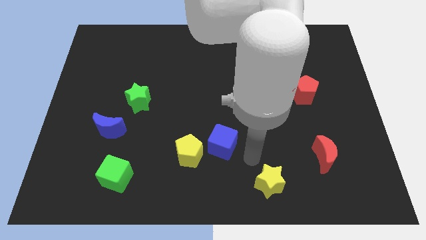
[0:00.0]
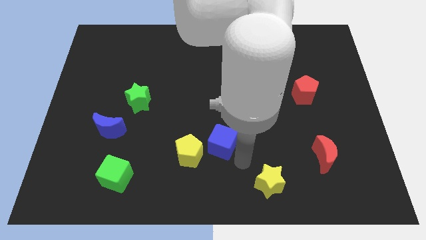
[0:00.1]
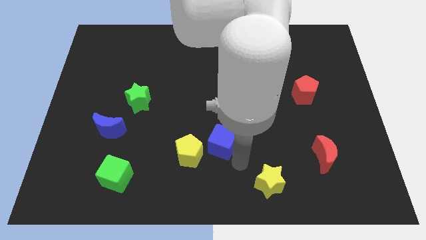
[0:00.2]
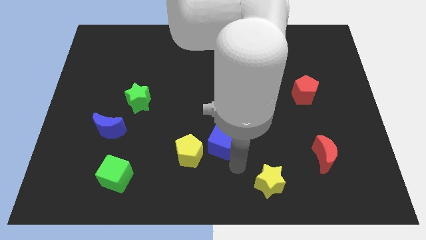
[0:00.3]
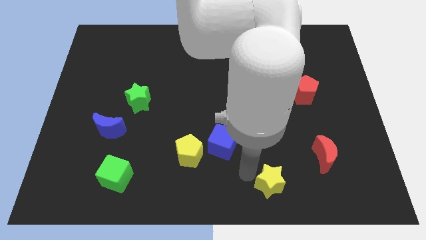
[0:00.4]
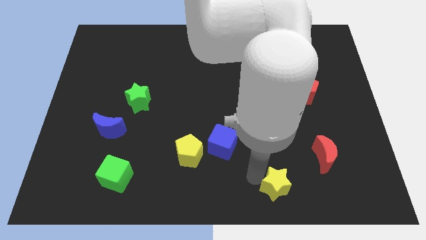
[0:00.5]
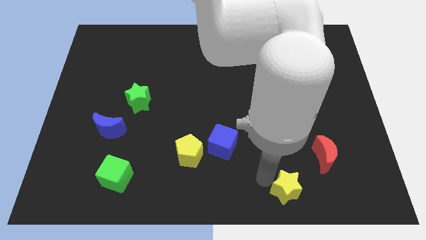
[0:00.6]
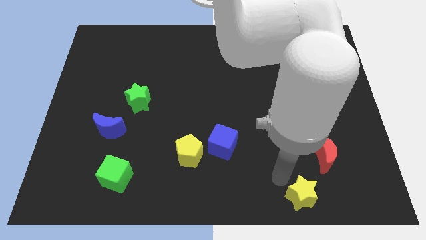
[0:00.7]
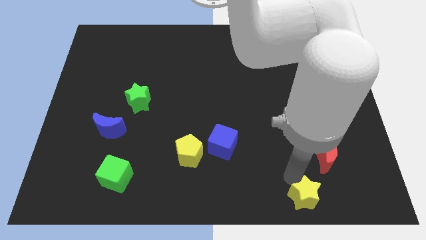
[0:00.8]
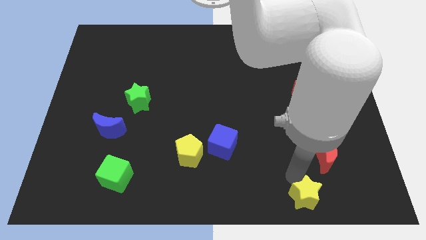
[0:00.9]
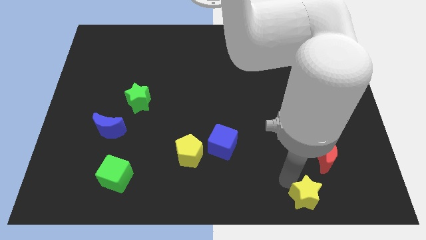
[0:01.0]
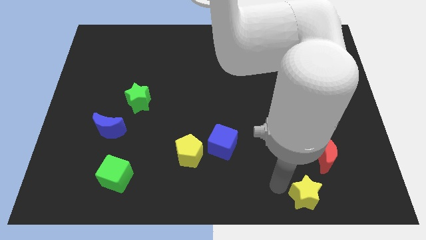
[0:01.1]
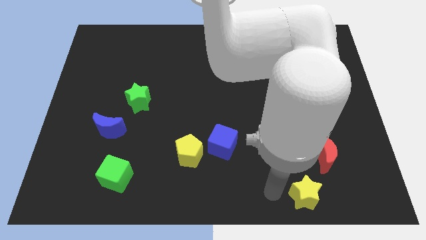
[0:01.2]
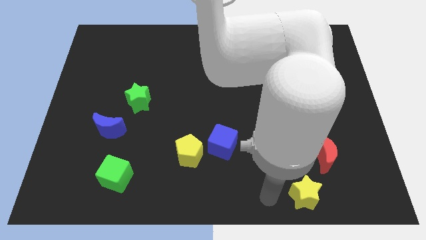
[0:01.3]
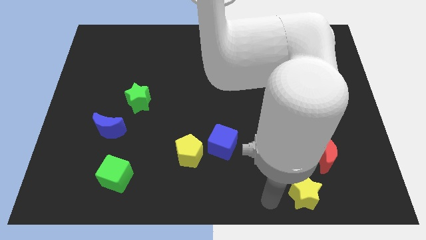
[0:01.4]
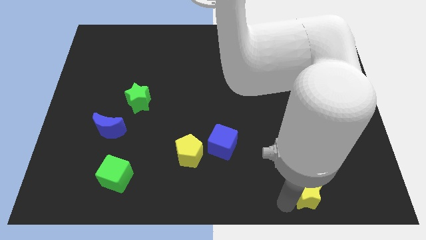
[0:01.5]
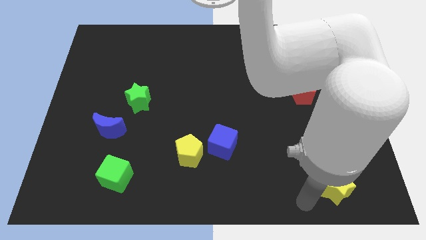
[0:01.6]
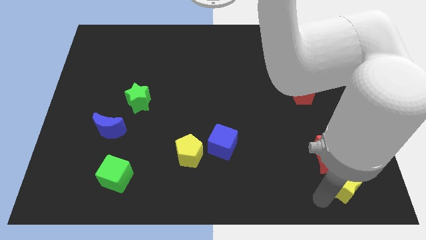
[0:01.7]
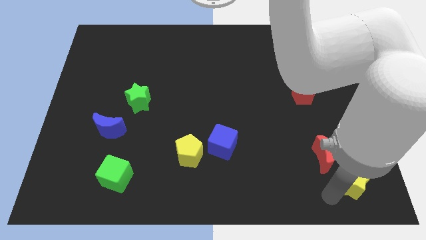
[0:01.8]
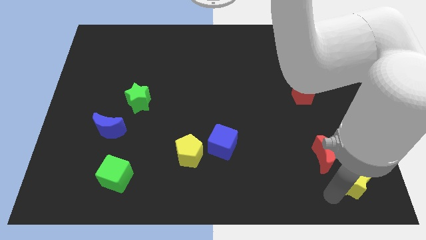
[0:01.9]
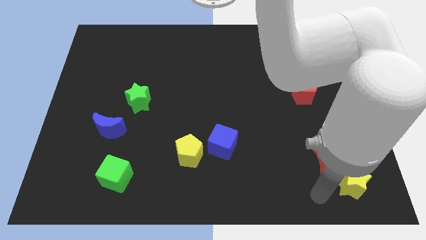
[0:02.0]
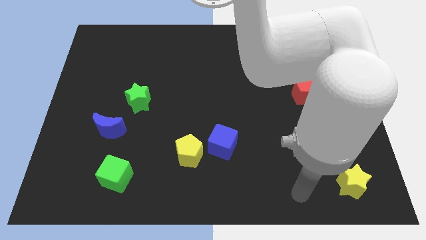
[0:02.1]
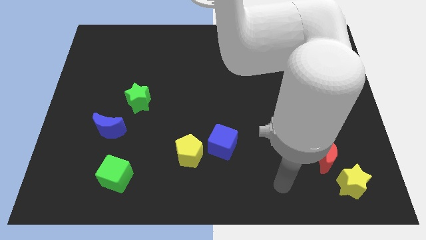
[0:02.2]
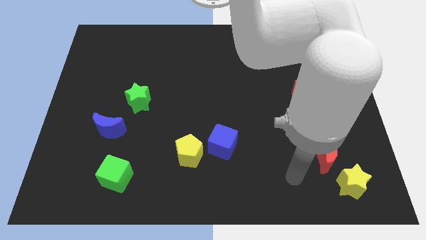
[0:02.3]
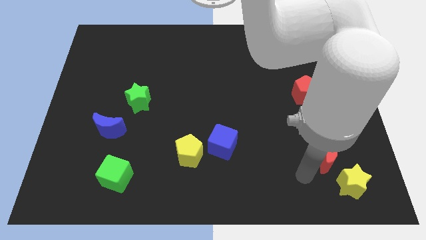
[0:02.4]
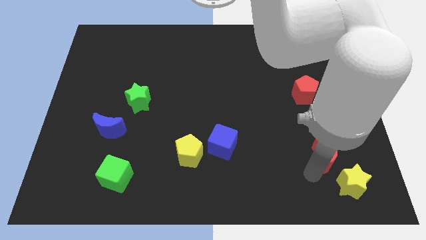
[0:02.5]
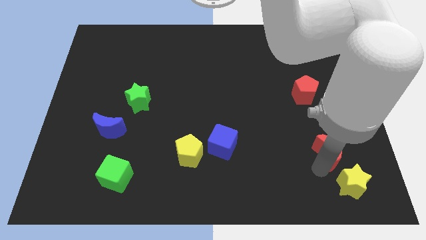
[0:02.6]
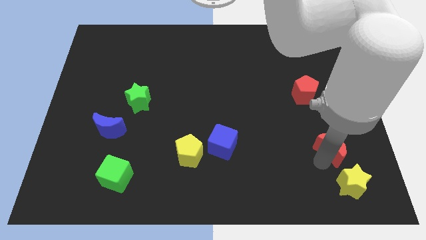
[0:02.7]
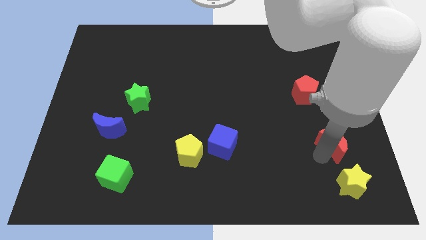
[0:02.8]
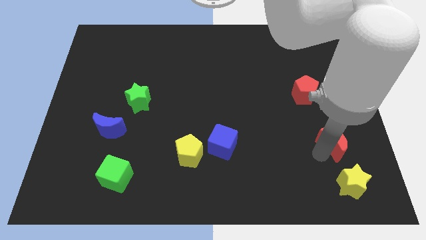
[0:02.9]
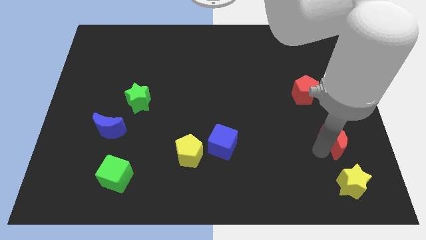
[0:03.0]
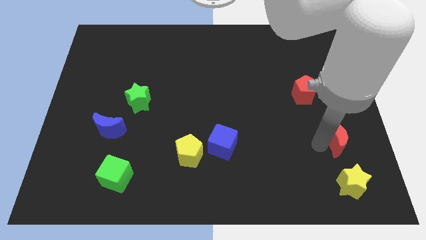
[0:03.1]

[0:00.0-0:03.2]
move the yellow star towards the top of the red crescent

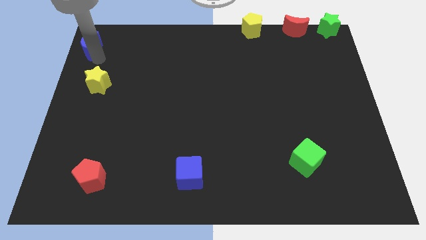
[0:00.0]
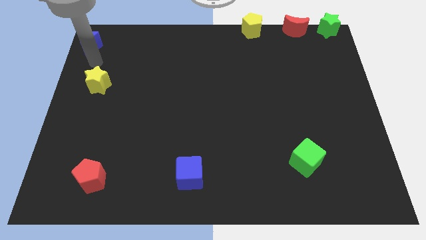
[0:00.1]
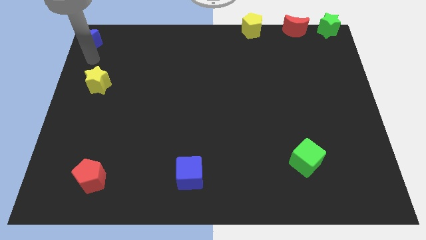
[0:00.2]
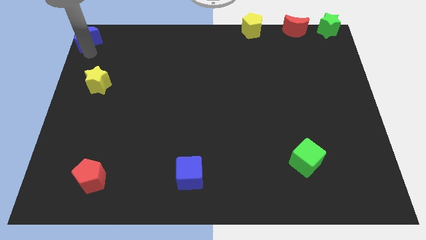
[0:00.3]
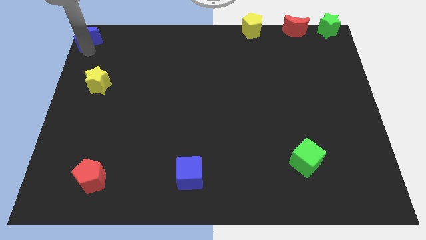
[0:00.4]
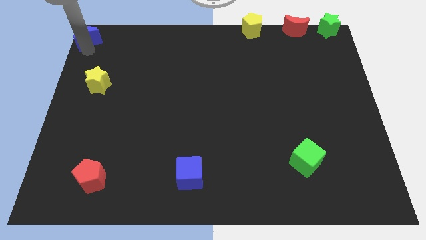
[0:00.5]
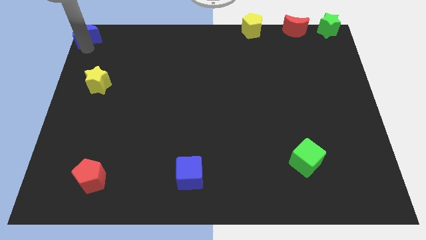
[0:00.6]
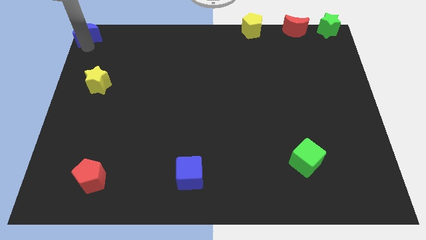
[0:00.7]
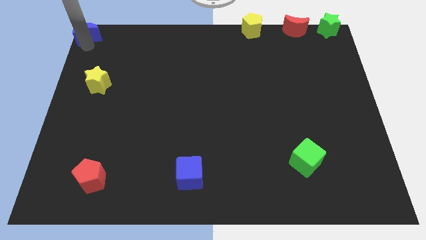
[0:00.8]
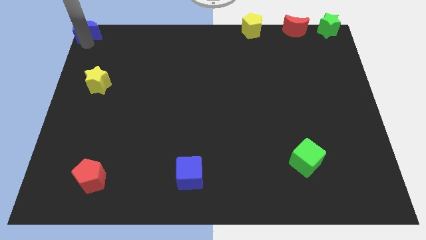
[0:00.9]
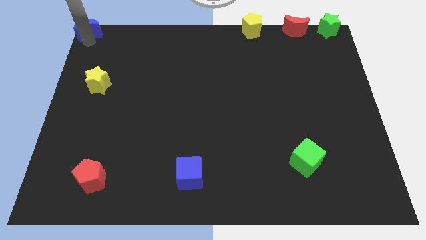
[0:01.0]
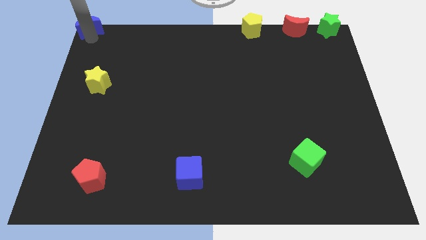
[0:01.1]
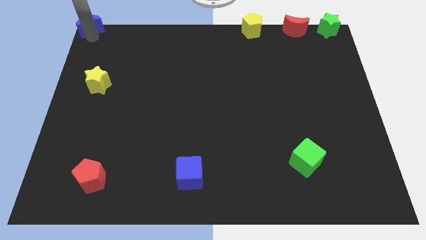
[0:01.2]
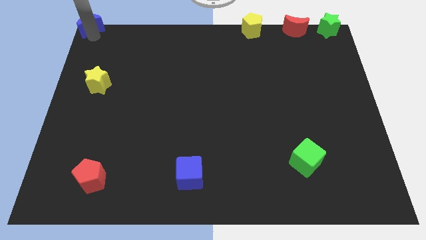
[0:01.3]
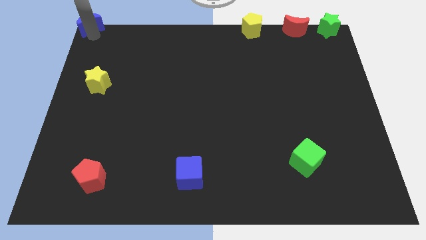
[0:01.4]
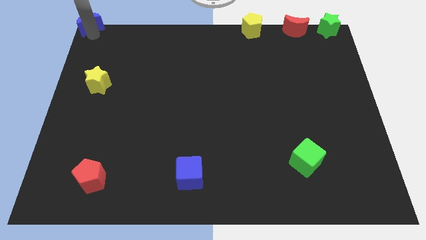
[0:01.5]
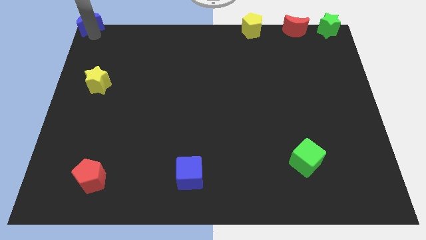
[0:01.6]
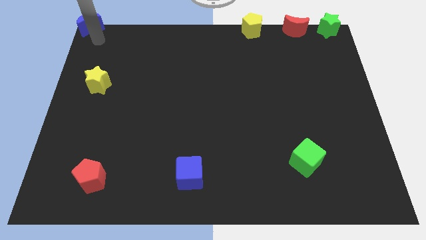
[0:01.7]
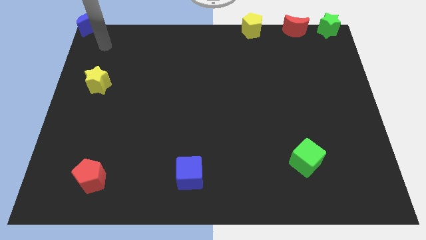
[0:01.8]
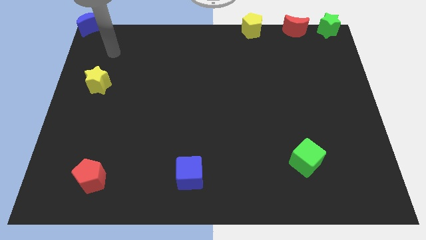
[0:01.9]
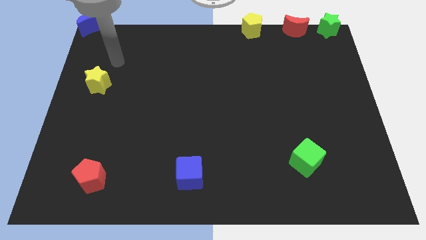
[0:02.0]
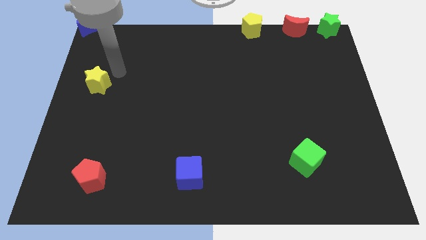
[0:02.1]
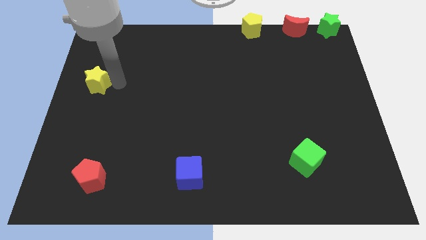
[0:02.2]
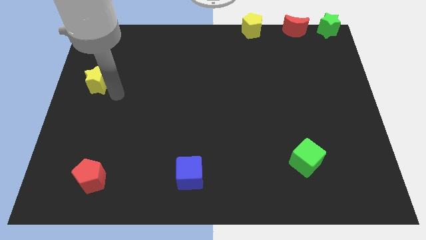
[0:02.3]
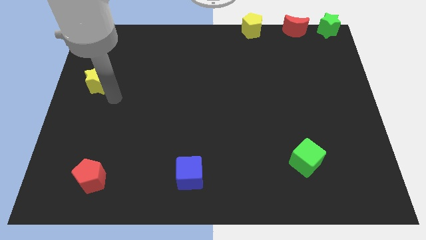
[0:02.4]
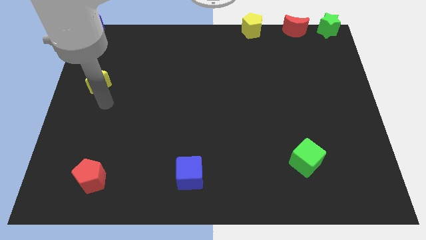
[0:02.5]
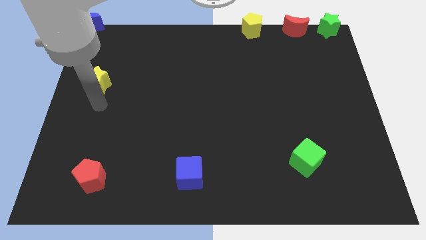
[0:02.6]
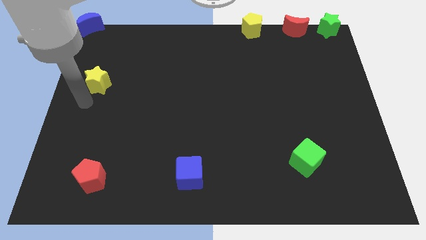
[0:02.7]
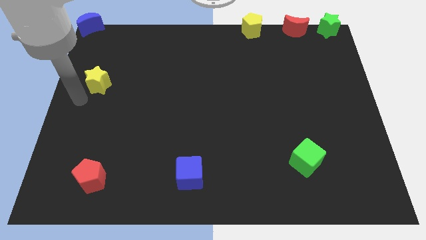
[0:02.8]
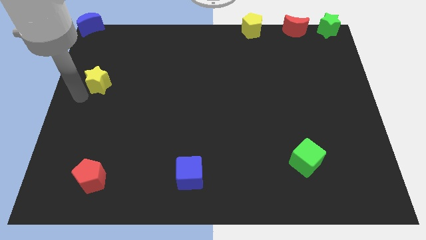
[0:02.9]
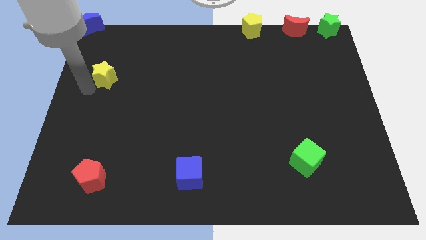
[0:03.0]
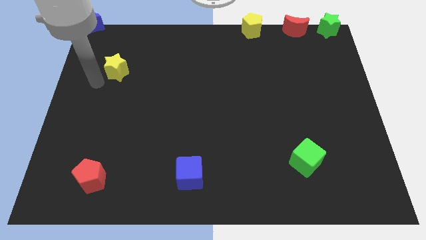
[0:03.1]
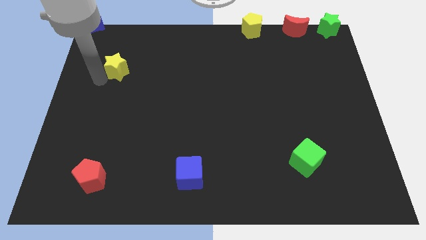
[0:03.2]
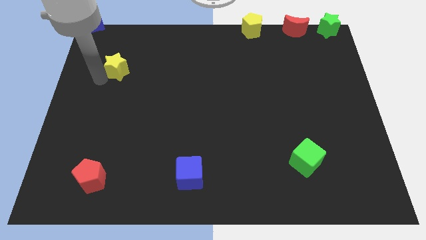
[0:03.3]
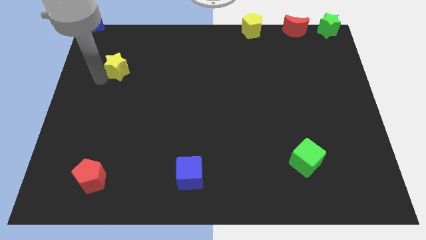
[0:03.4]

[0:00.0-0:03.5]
push the yellow star slightly to the top side

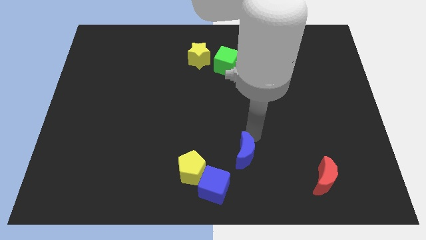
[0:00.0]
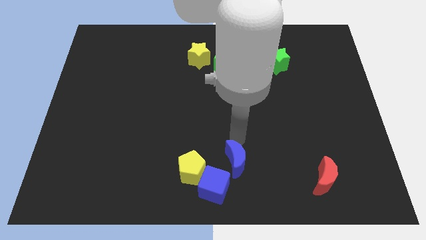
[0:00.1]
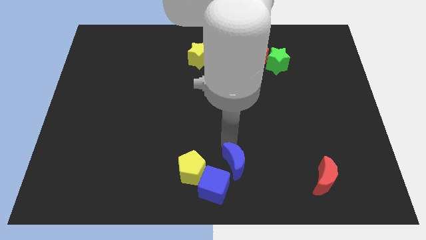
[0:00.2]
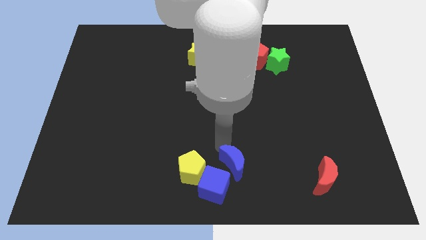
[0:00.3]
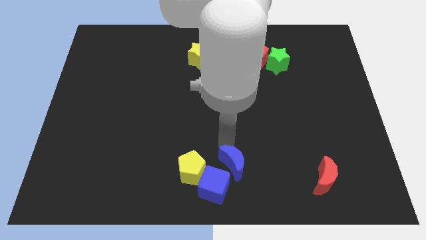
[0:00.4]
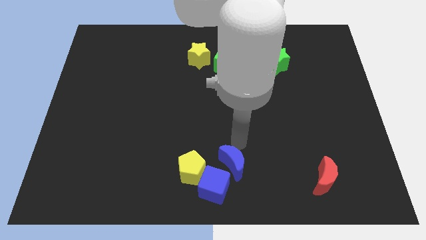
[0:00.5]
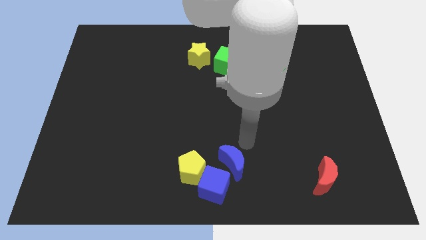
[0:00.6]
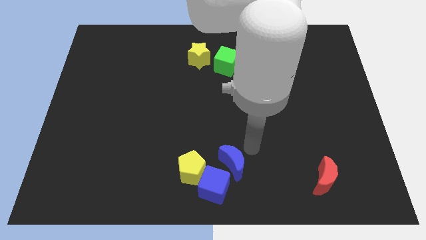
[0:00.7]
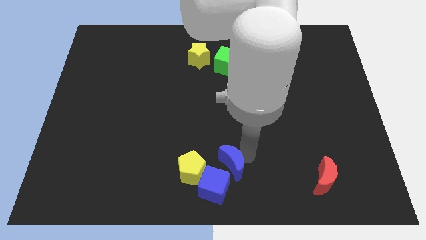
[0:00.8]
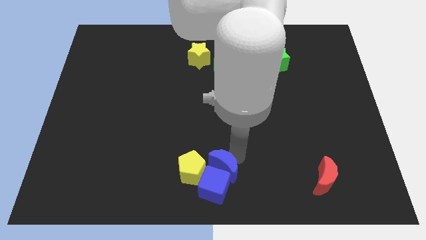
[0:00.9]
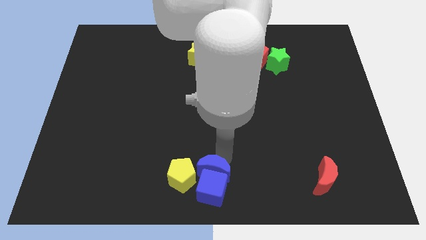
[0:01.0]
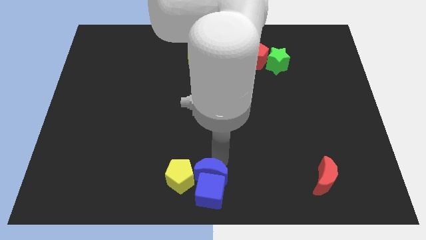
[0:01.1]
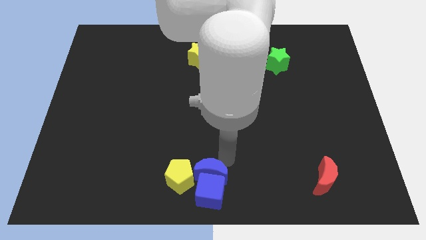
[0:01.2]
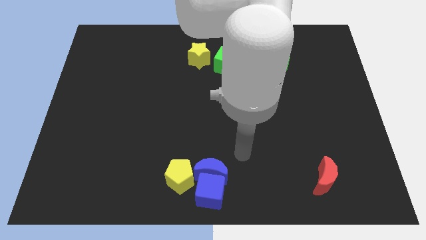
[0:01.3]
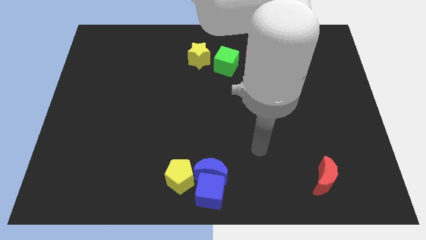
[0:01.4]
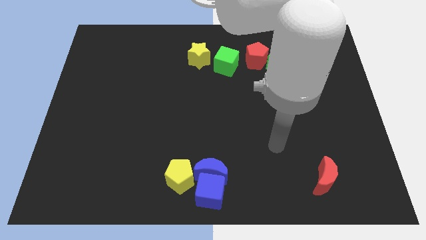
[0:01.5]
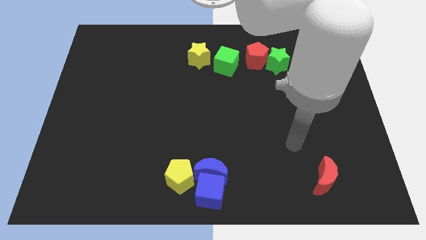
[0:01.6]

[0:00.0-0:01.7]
push the blue crescent into the blue cube to the bottom center

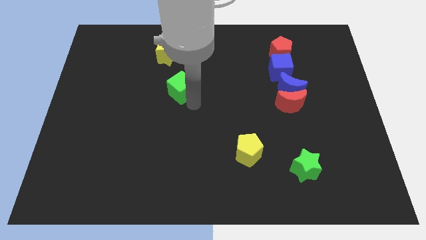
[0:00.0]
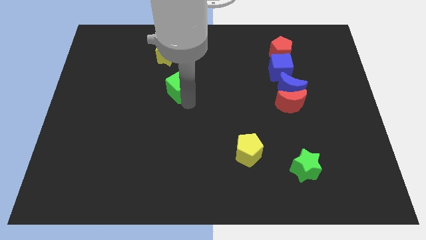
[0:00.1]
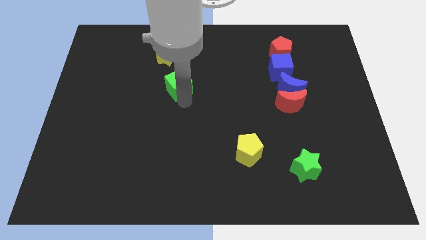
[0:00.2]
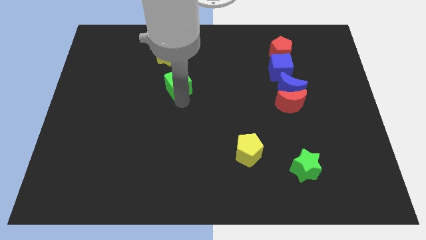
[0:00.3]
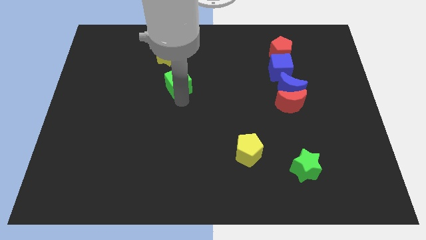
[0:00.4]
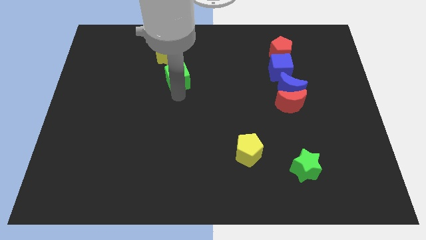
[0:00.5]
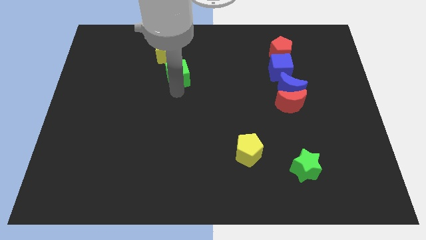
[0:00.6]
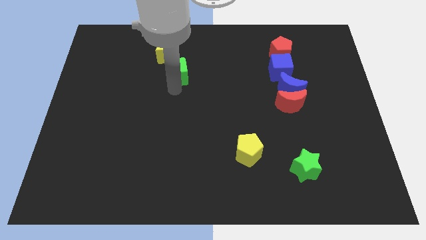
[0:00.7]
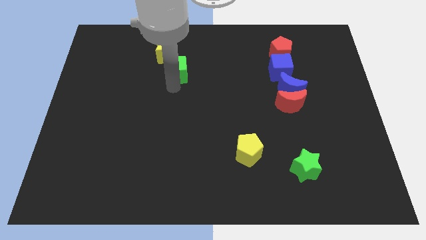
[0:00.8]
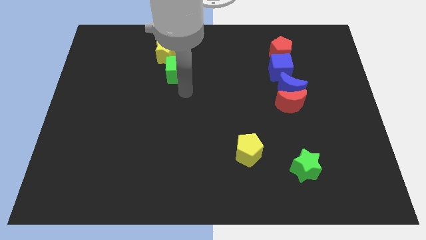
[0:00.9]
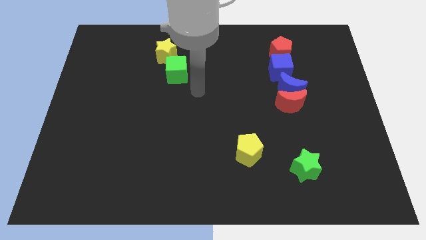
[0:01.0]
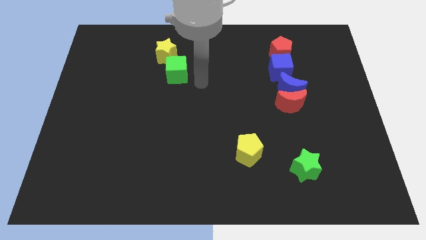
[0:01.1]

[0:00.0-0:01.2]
push the green cube below the yellow star
